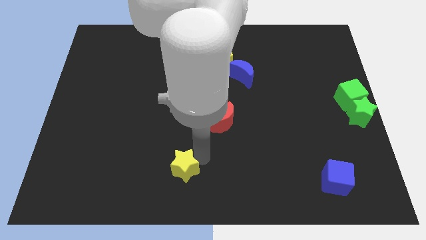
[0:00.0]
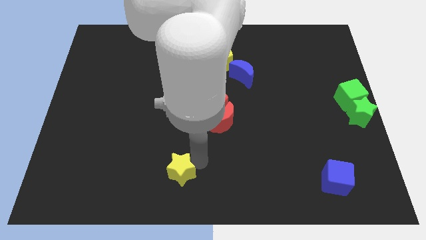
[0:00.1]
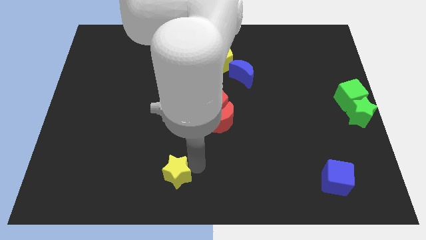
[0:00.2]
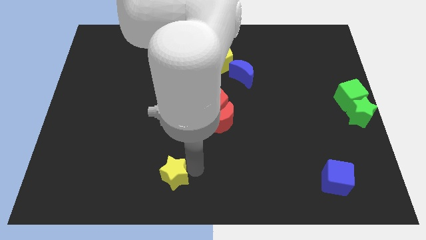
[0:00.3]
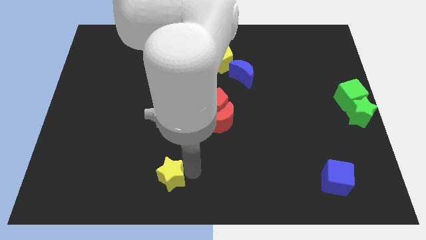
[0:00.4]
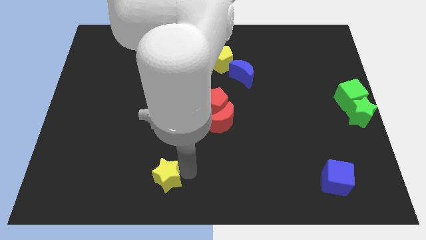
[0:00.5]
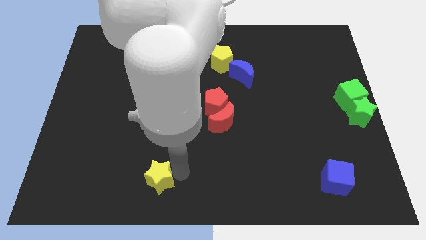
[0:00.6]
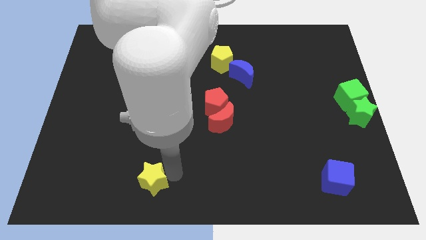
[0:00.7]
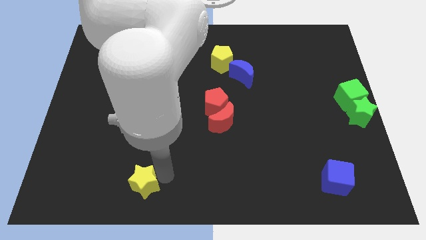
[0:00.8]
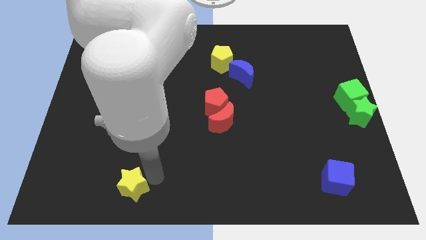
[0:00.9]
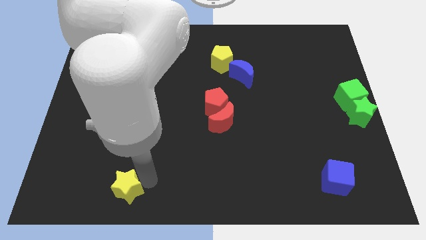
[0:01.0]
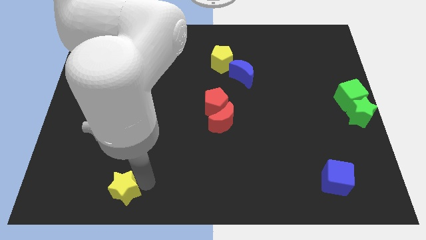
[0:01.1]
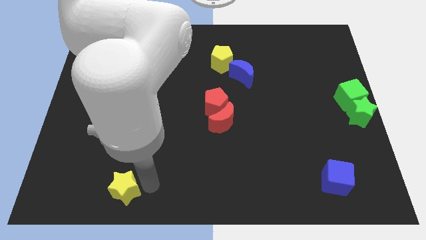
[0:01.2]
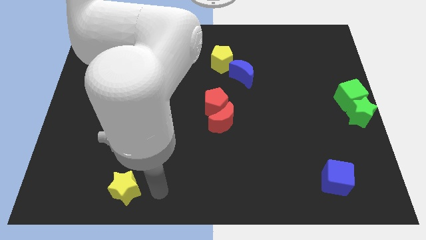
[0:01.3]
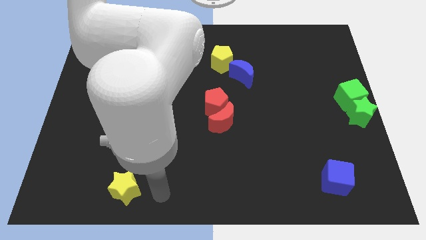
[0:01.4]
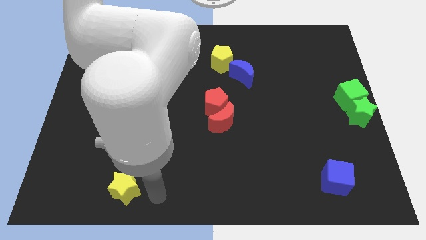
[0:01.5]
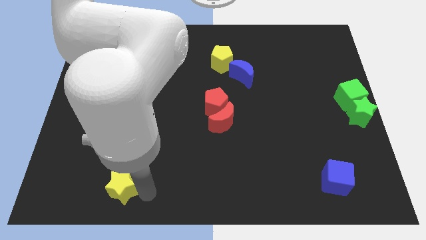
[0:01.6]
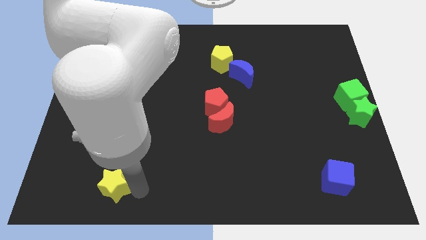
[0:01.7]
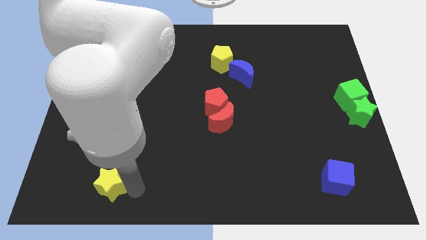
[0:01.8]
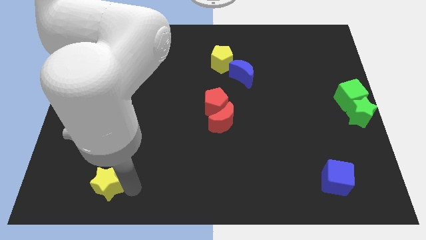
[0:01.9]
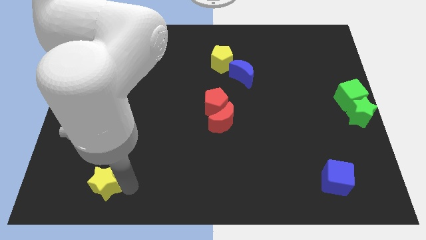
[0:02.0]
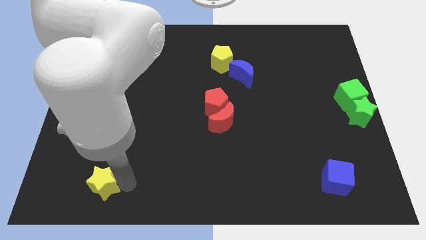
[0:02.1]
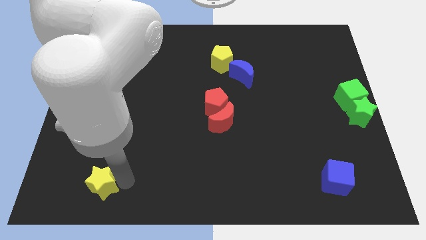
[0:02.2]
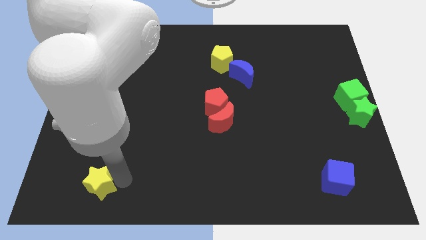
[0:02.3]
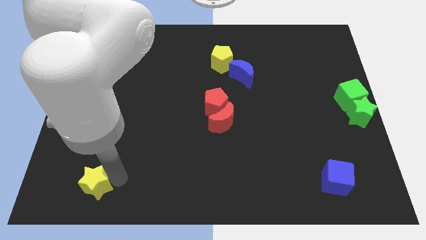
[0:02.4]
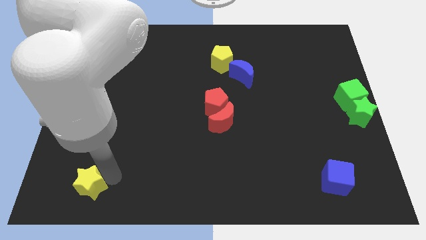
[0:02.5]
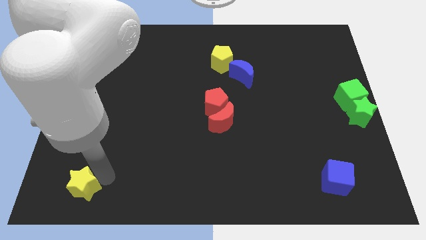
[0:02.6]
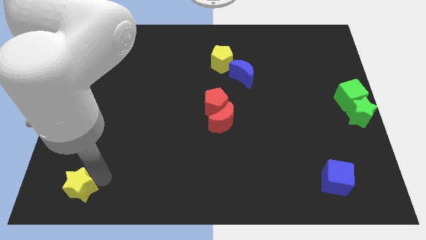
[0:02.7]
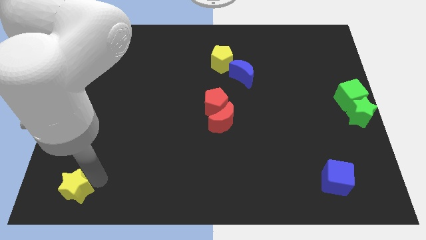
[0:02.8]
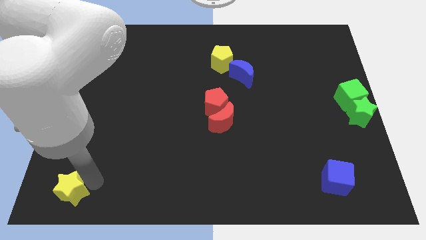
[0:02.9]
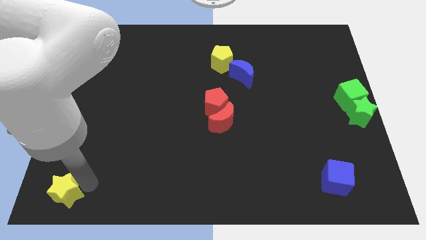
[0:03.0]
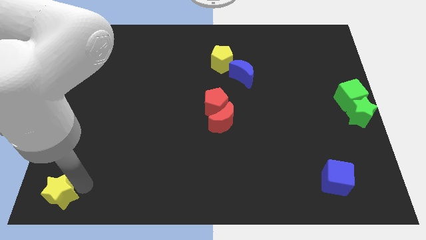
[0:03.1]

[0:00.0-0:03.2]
push the yellow star to the bottom left to the board

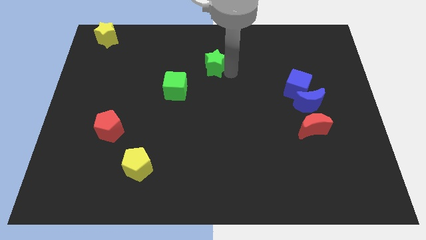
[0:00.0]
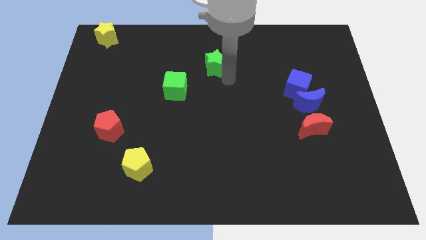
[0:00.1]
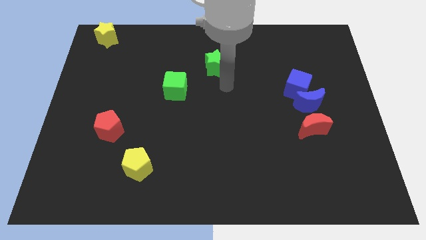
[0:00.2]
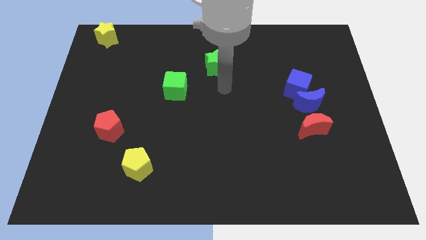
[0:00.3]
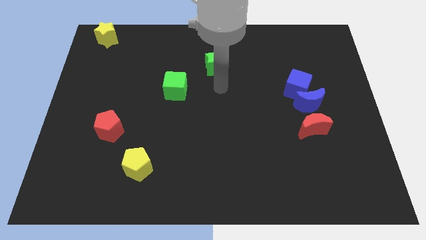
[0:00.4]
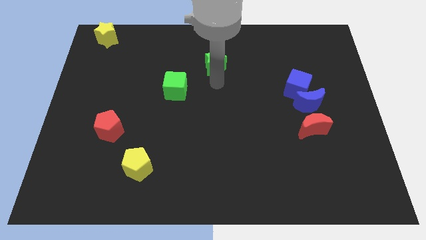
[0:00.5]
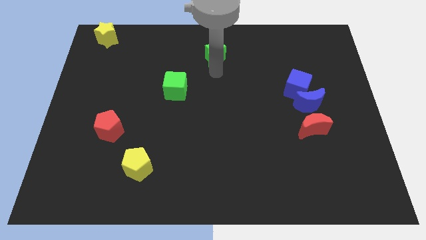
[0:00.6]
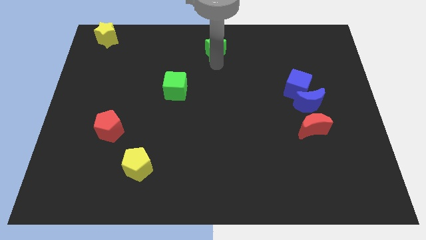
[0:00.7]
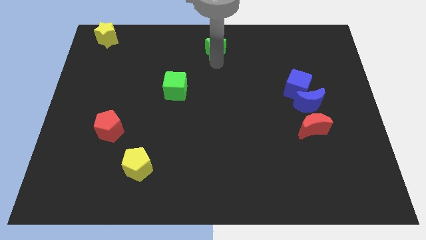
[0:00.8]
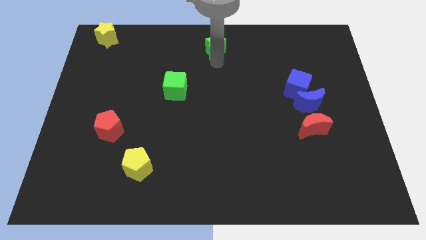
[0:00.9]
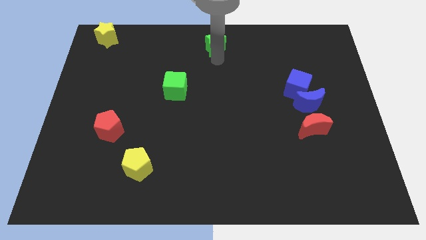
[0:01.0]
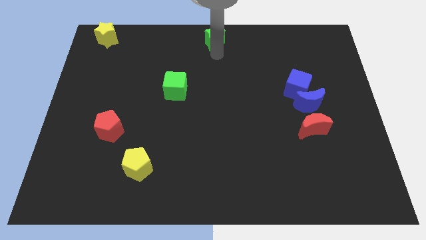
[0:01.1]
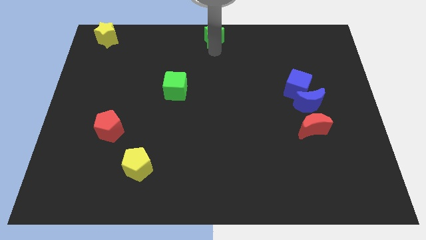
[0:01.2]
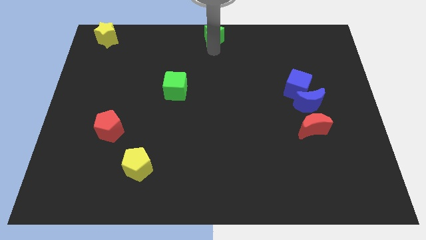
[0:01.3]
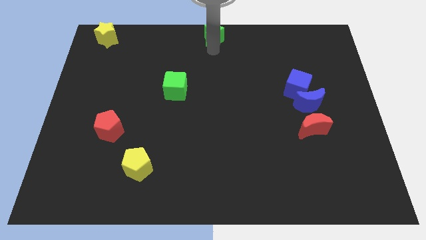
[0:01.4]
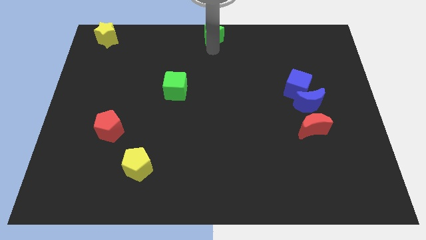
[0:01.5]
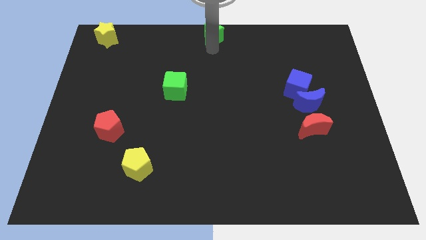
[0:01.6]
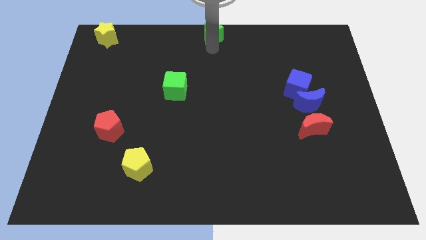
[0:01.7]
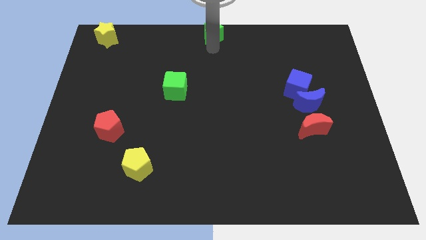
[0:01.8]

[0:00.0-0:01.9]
slide the green star to the top center of the board

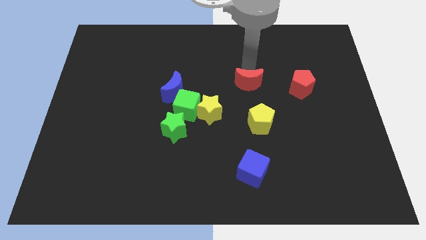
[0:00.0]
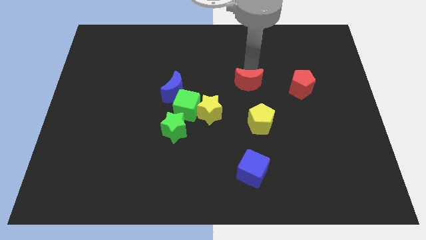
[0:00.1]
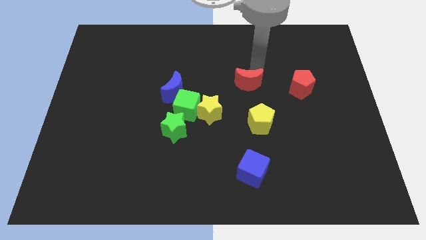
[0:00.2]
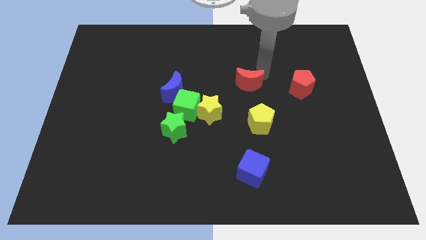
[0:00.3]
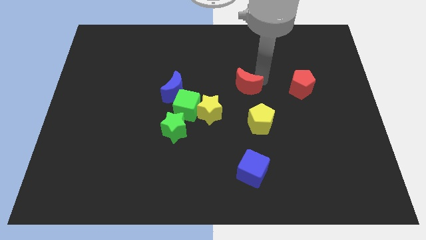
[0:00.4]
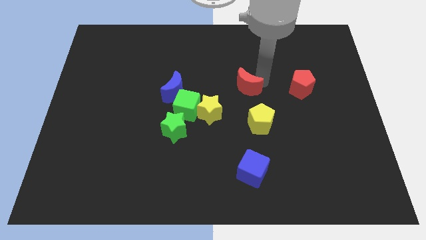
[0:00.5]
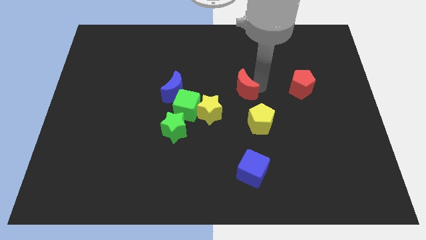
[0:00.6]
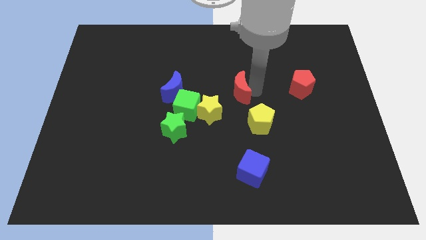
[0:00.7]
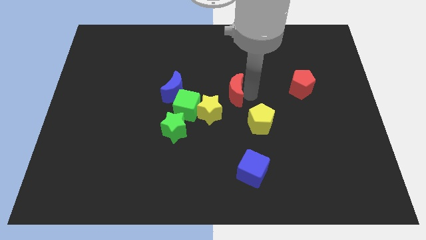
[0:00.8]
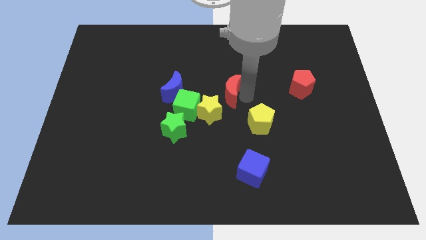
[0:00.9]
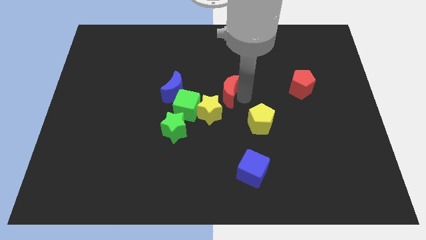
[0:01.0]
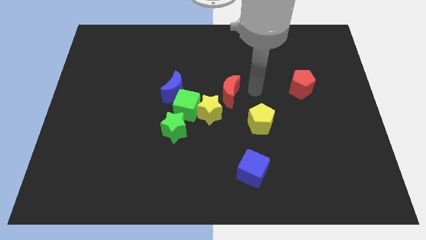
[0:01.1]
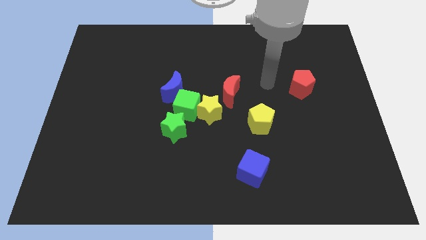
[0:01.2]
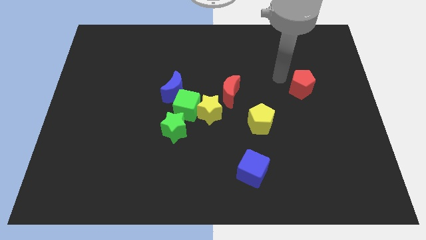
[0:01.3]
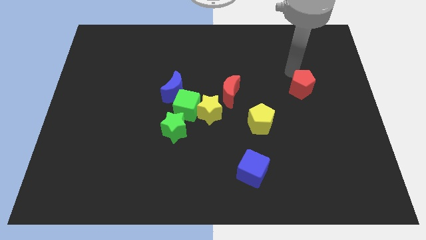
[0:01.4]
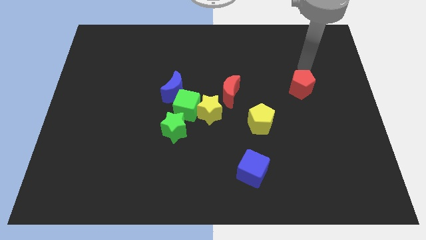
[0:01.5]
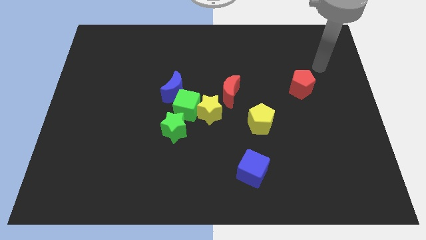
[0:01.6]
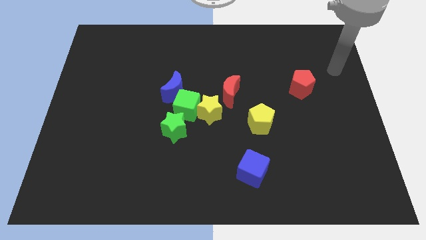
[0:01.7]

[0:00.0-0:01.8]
move the red crescent towards the yellow star

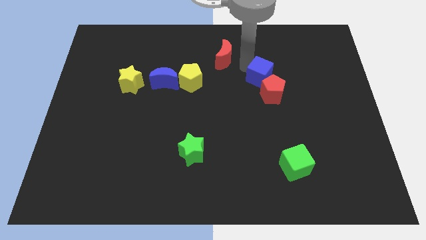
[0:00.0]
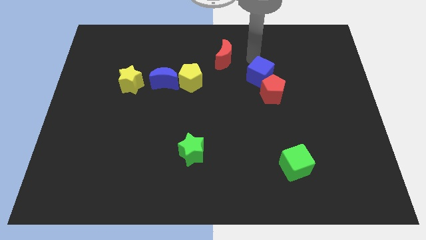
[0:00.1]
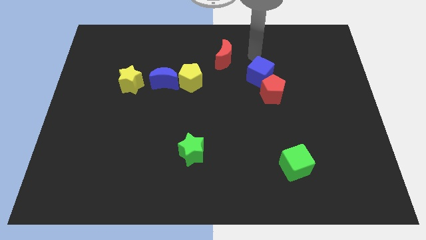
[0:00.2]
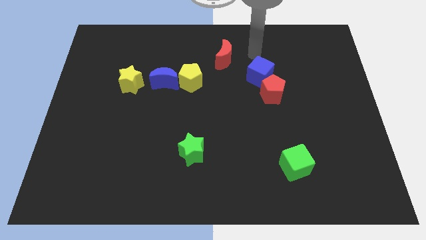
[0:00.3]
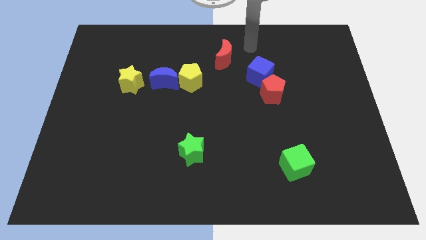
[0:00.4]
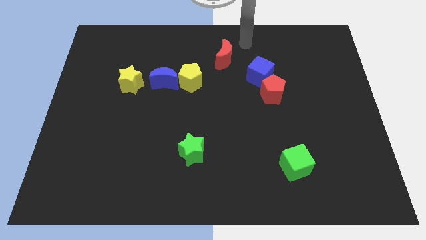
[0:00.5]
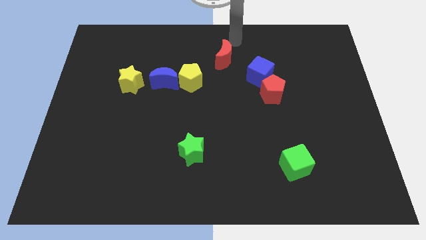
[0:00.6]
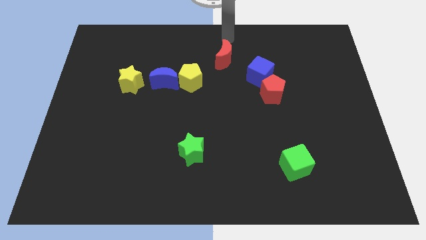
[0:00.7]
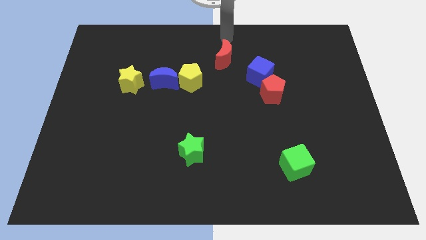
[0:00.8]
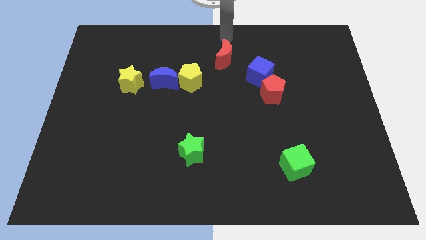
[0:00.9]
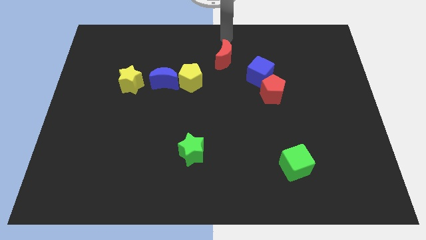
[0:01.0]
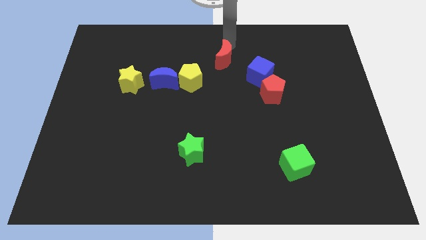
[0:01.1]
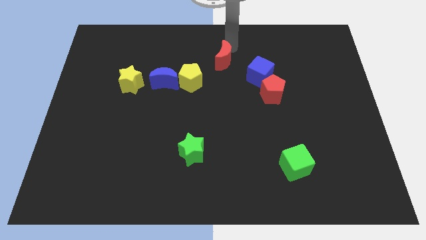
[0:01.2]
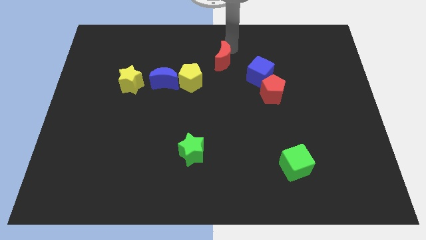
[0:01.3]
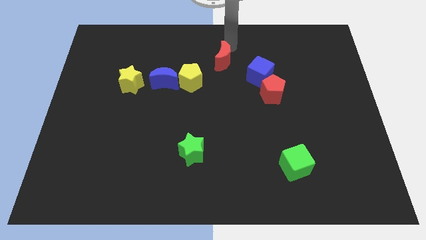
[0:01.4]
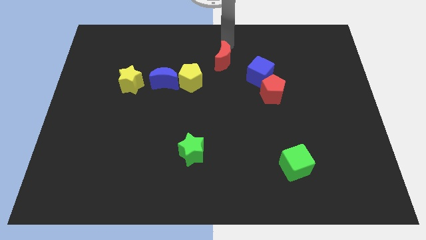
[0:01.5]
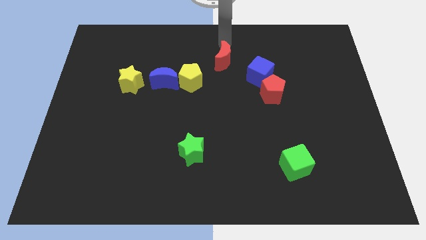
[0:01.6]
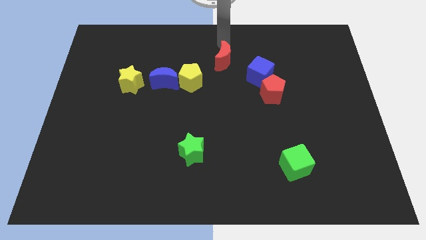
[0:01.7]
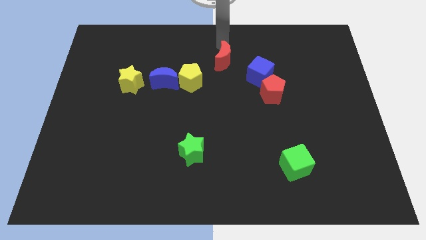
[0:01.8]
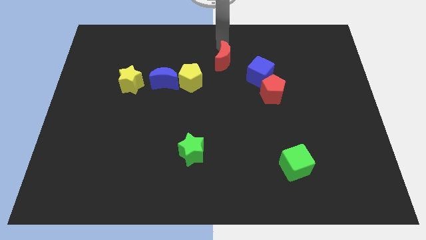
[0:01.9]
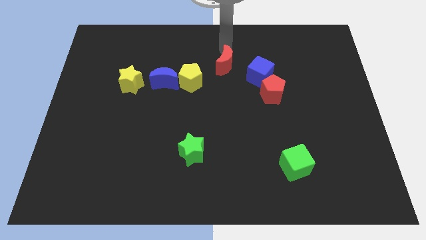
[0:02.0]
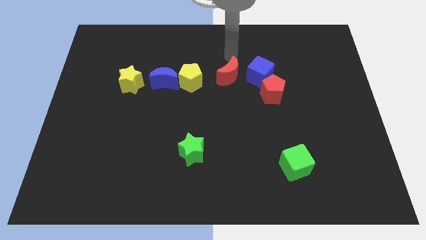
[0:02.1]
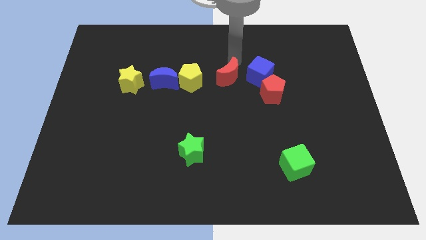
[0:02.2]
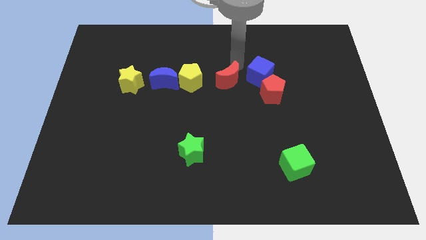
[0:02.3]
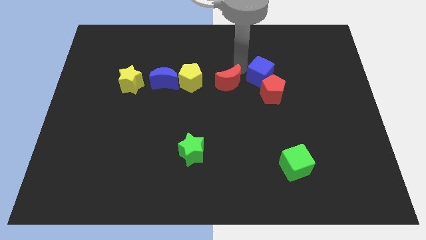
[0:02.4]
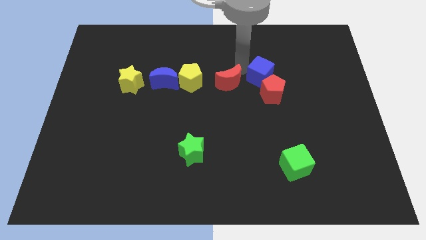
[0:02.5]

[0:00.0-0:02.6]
push the red crescent left to the blue cube
